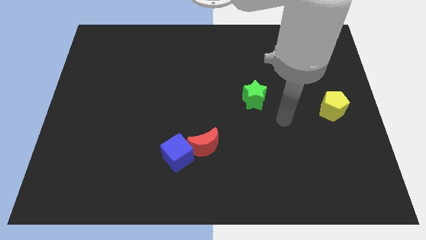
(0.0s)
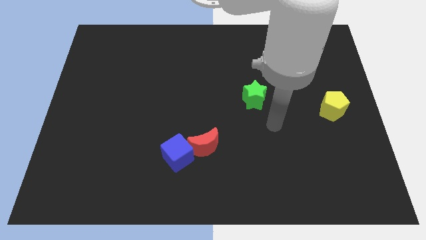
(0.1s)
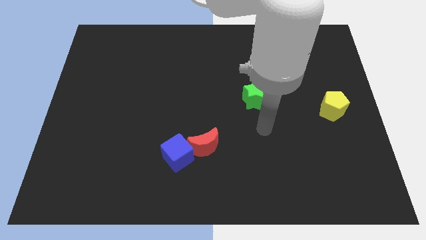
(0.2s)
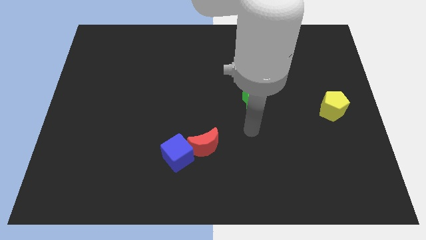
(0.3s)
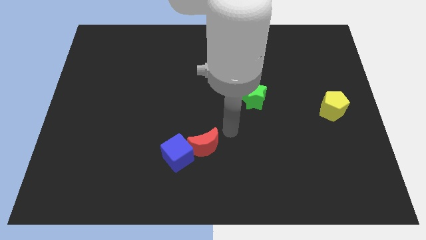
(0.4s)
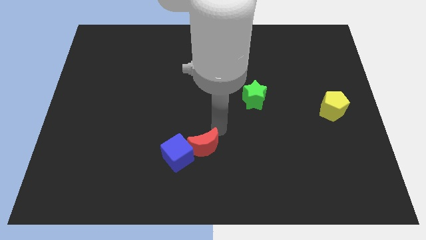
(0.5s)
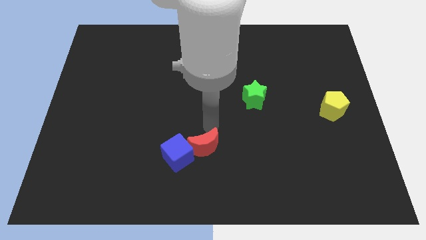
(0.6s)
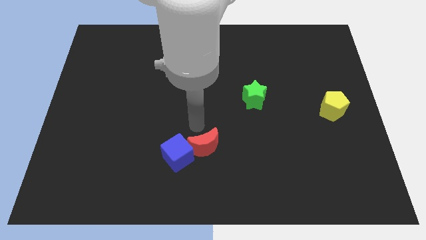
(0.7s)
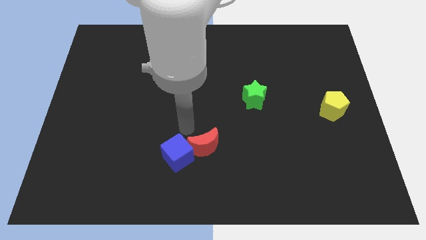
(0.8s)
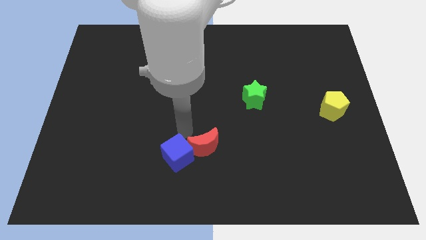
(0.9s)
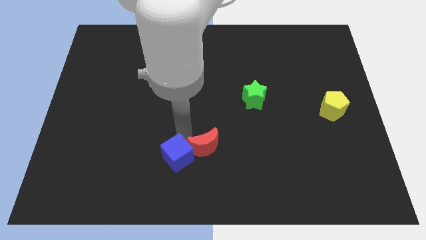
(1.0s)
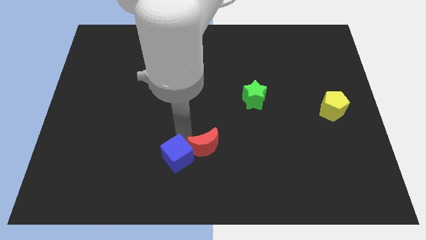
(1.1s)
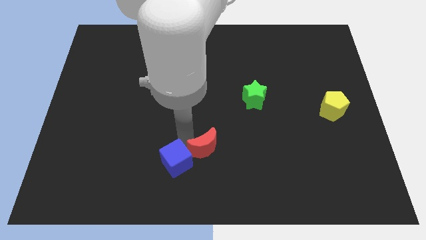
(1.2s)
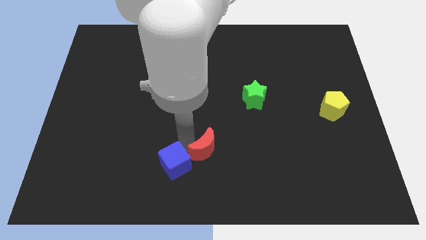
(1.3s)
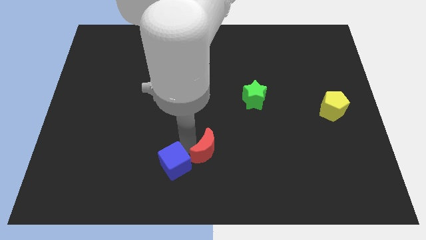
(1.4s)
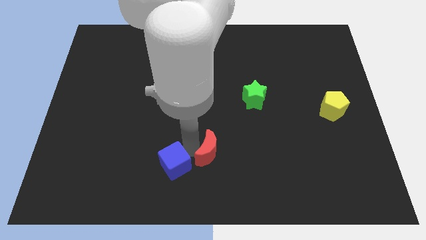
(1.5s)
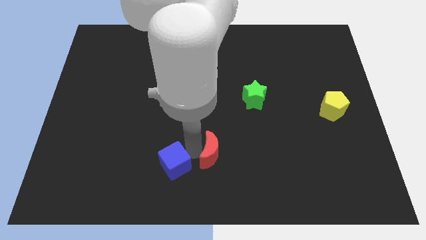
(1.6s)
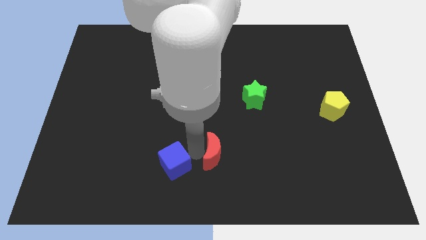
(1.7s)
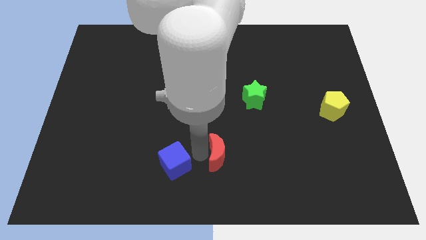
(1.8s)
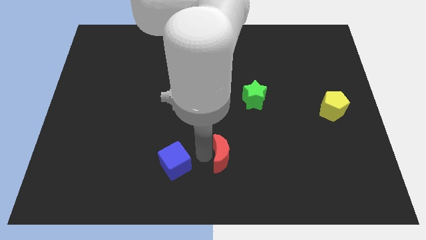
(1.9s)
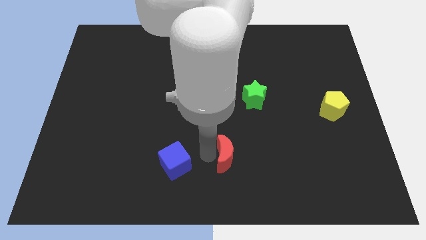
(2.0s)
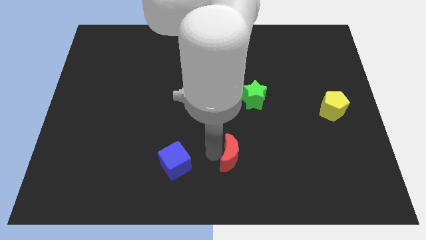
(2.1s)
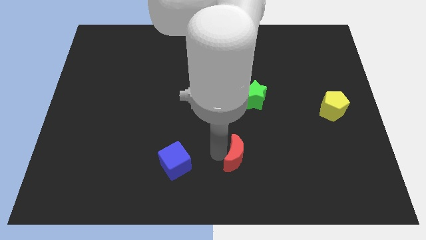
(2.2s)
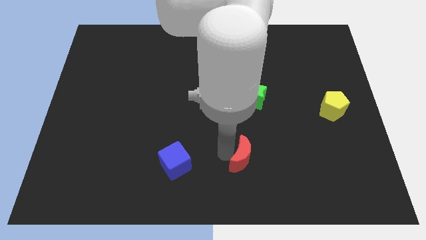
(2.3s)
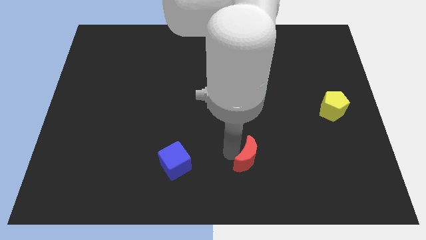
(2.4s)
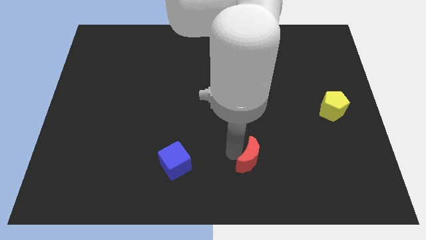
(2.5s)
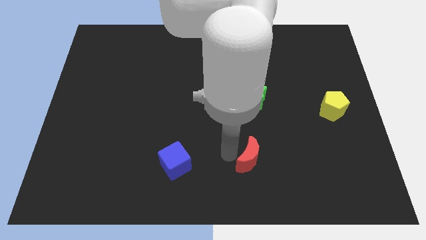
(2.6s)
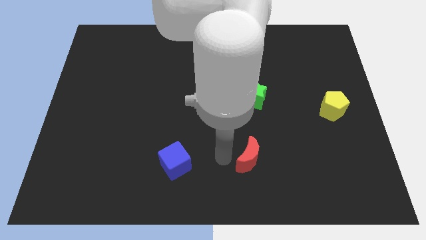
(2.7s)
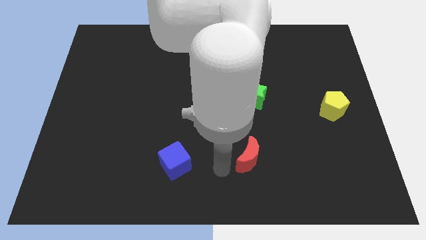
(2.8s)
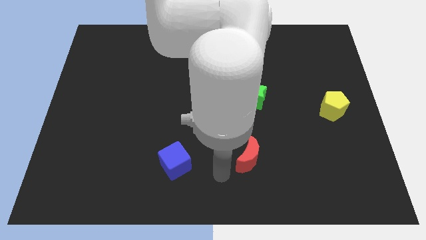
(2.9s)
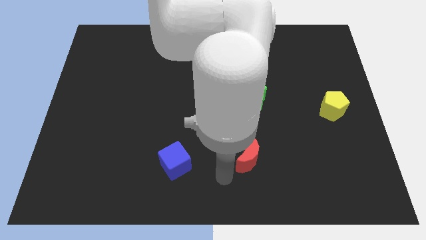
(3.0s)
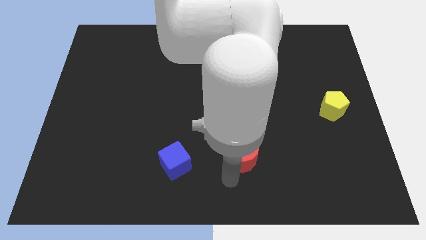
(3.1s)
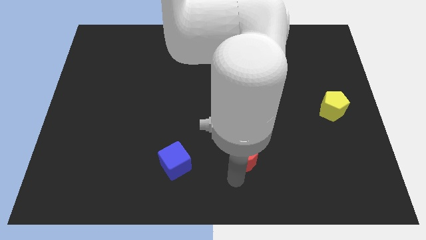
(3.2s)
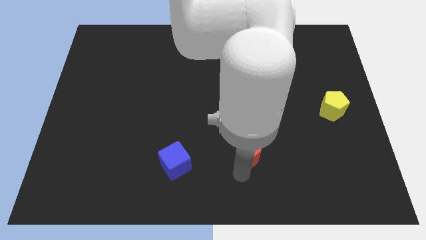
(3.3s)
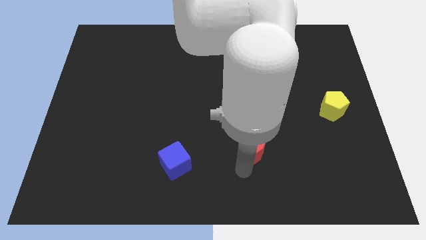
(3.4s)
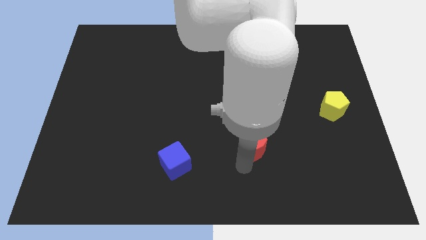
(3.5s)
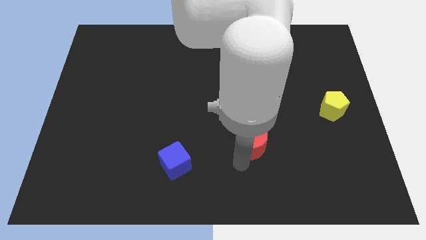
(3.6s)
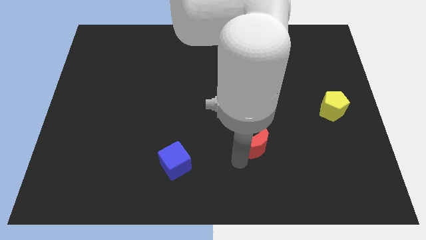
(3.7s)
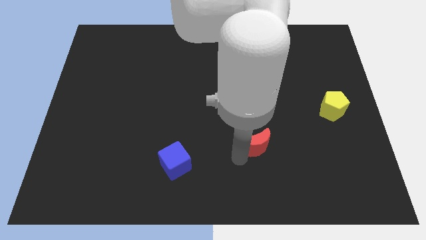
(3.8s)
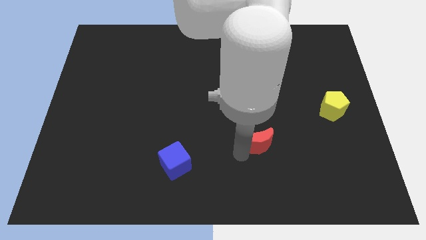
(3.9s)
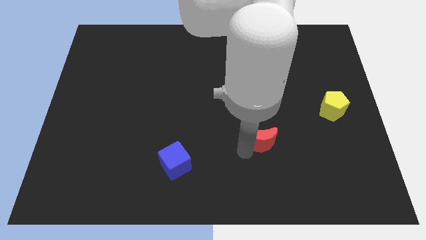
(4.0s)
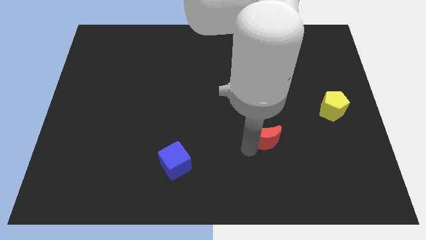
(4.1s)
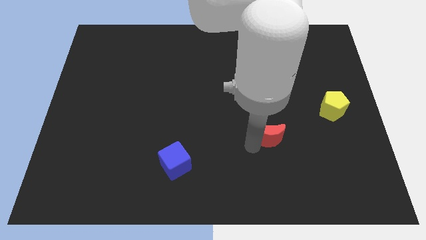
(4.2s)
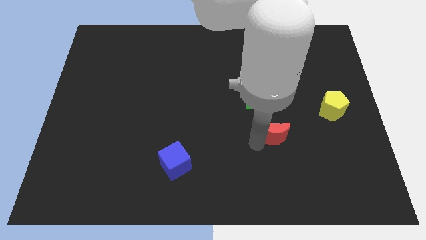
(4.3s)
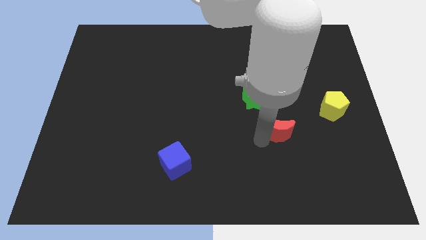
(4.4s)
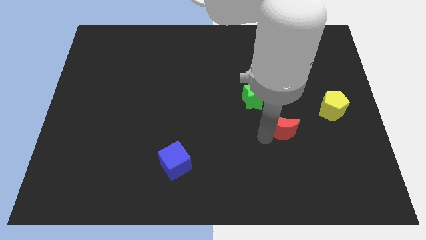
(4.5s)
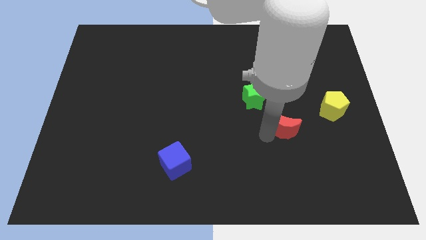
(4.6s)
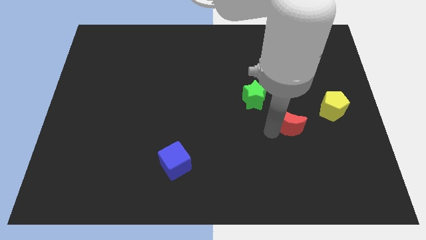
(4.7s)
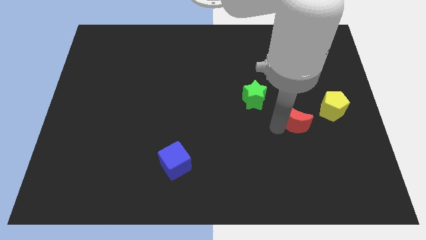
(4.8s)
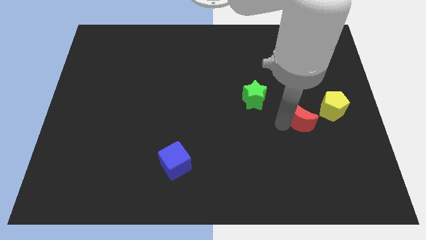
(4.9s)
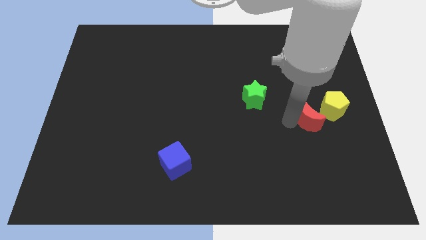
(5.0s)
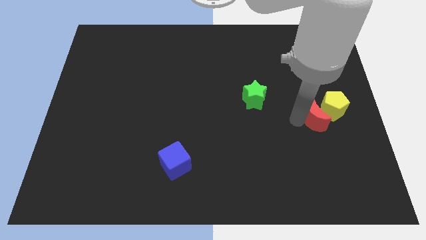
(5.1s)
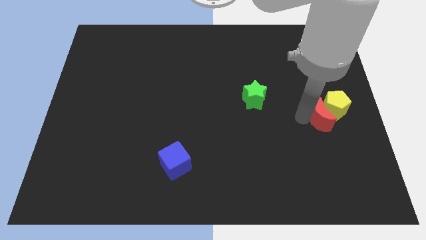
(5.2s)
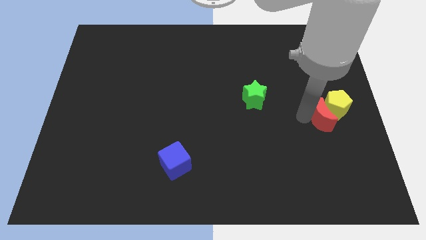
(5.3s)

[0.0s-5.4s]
put the red block towards the yellow block

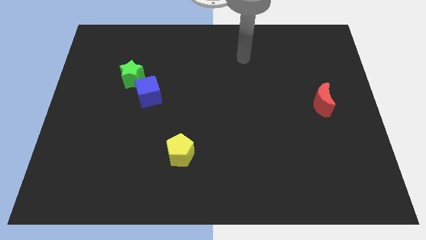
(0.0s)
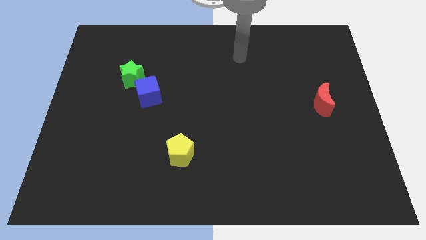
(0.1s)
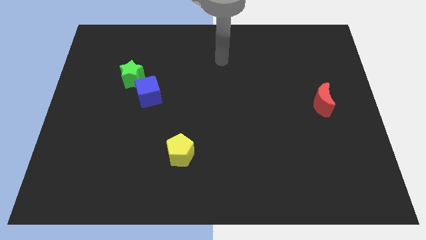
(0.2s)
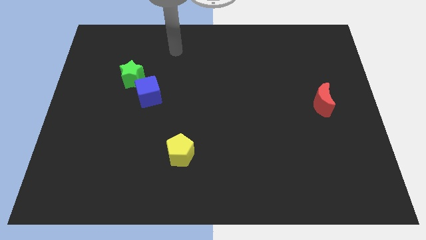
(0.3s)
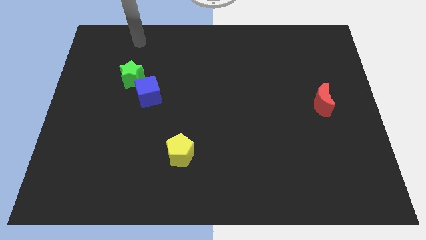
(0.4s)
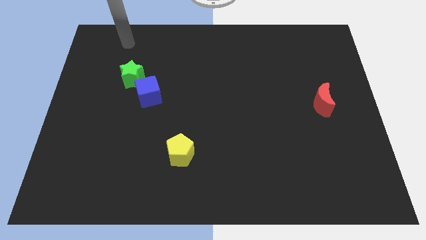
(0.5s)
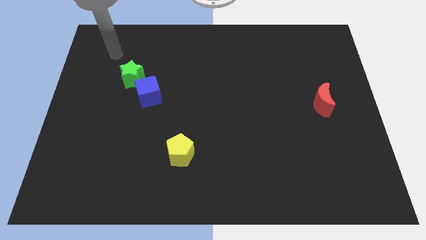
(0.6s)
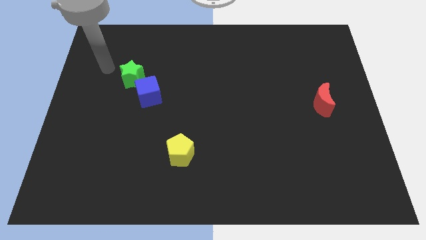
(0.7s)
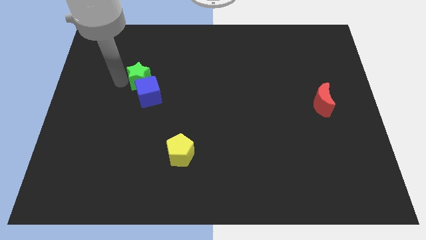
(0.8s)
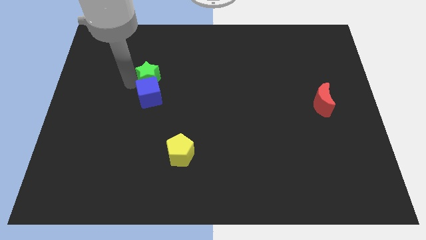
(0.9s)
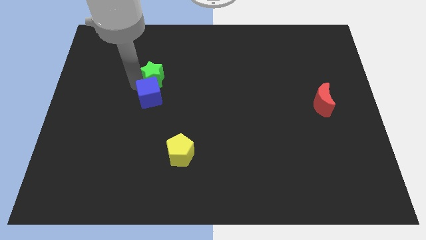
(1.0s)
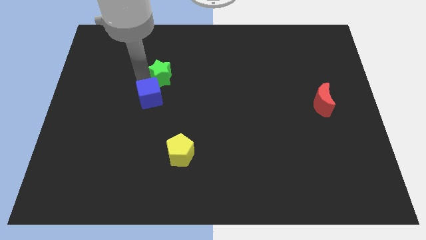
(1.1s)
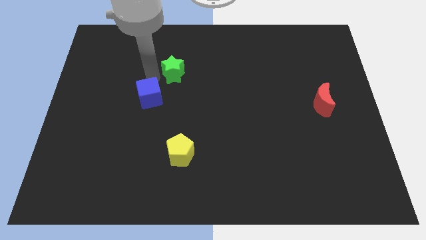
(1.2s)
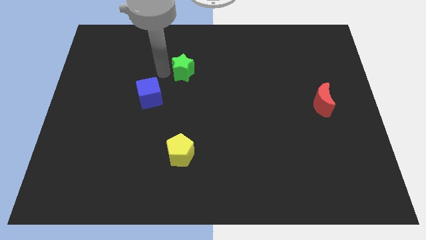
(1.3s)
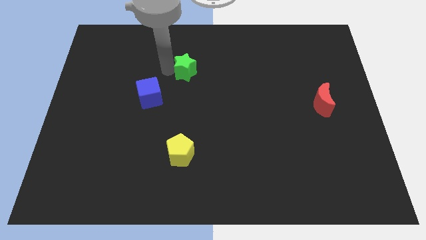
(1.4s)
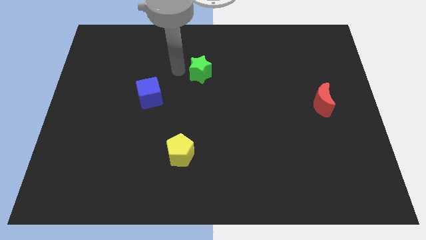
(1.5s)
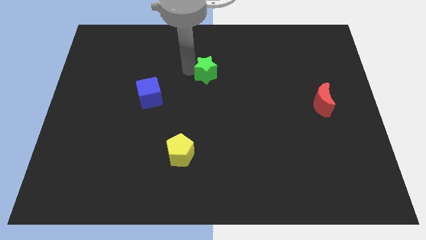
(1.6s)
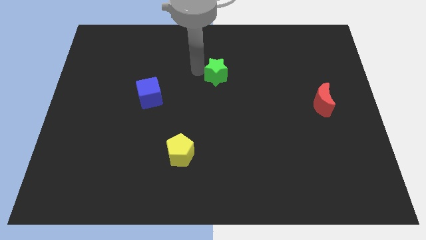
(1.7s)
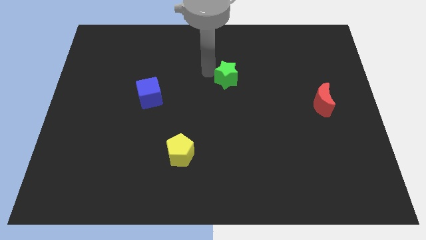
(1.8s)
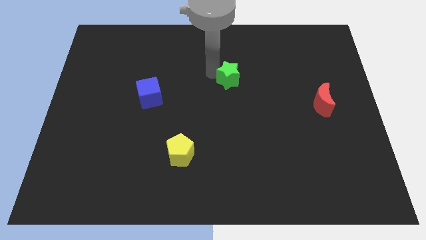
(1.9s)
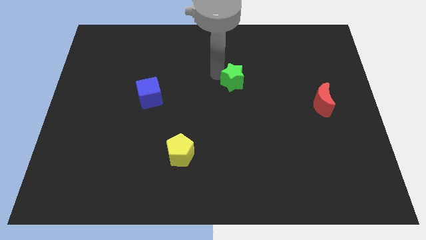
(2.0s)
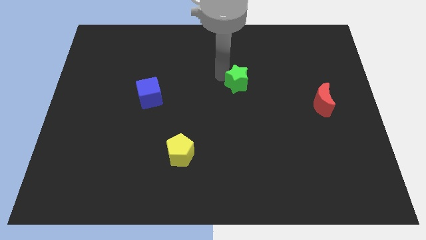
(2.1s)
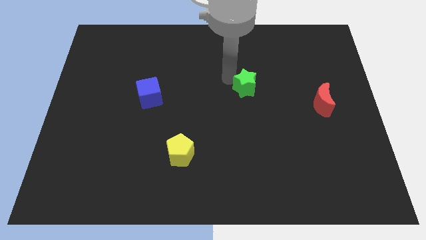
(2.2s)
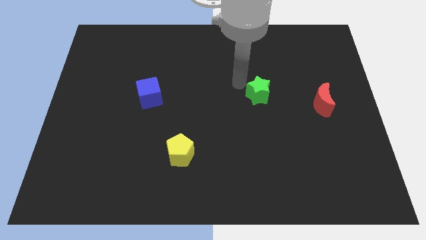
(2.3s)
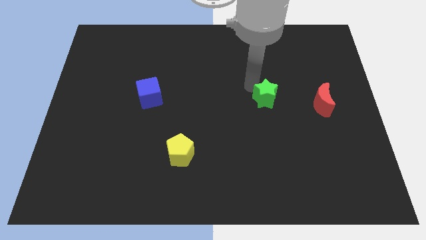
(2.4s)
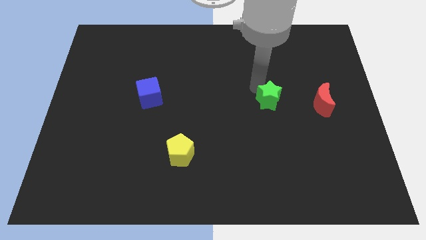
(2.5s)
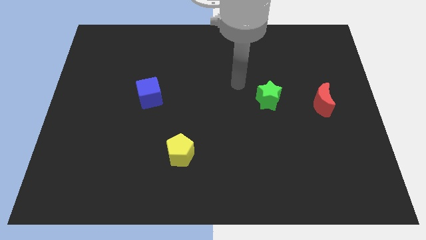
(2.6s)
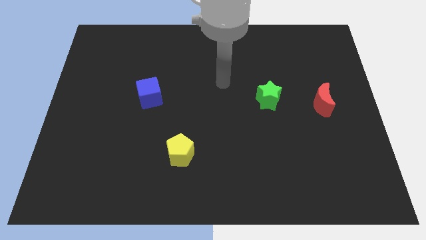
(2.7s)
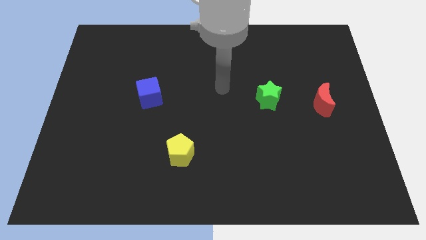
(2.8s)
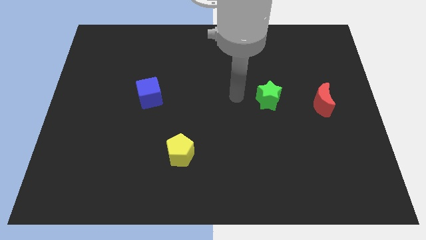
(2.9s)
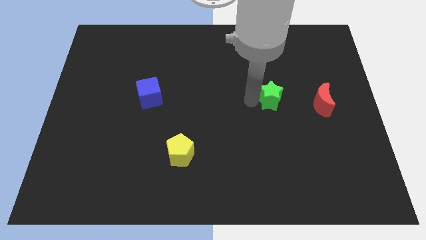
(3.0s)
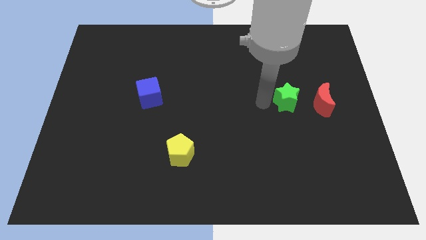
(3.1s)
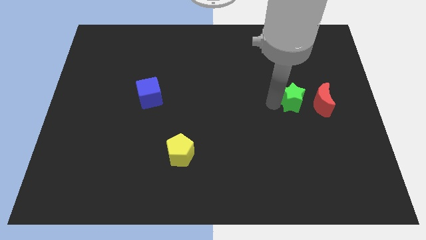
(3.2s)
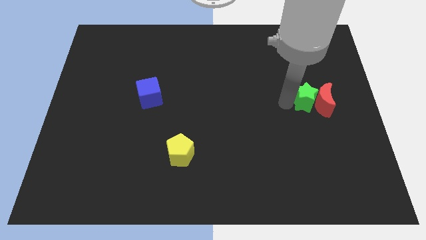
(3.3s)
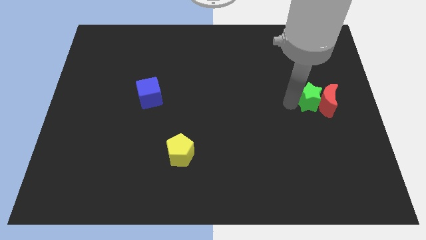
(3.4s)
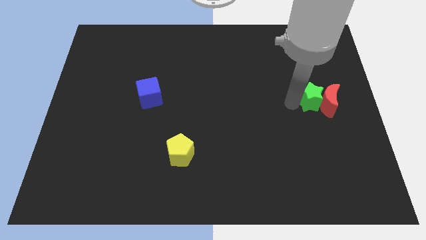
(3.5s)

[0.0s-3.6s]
put the green star next to the red moon
